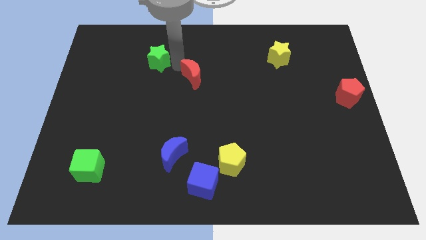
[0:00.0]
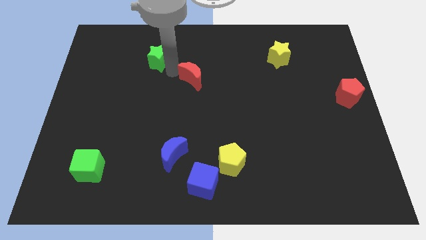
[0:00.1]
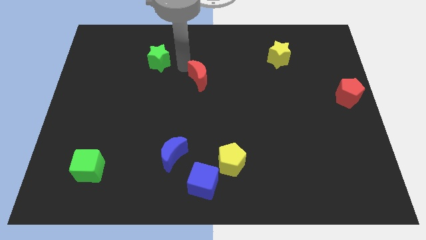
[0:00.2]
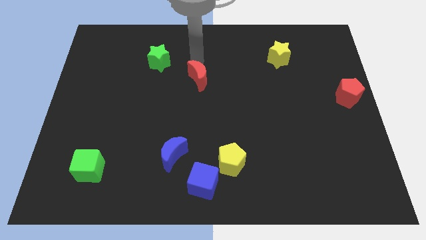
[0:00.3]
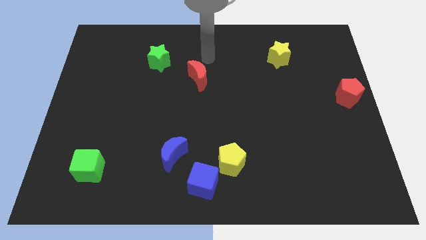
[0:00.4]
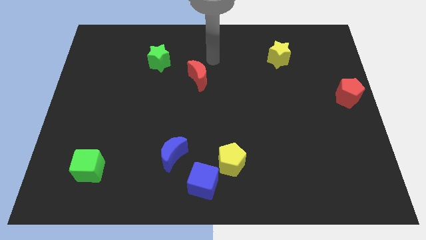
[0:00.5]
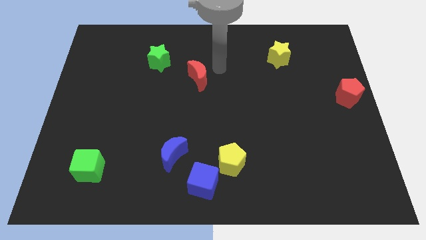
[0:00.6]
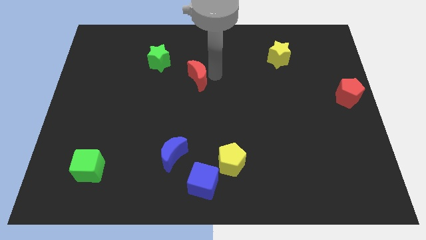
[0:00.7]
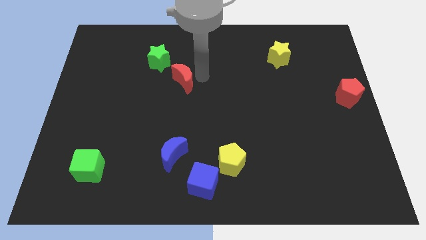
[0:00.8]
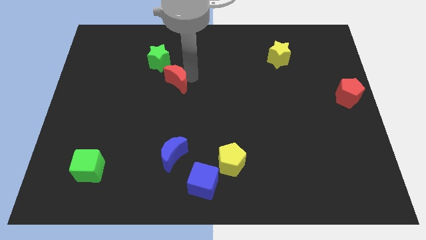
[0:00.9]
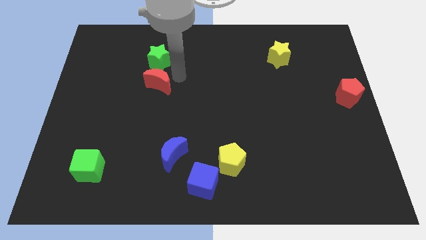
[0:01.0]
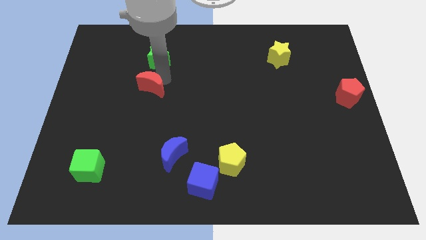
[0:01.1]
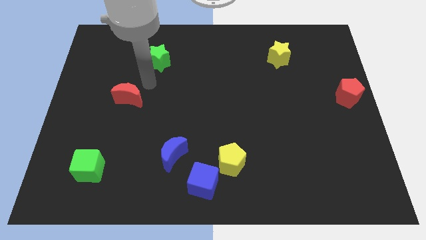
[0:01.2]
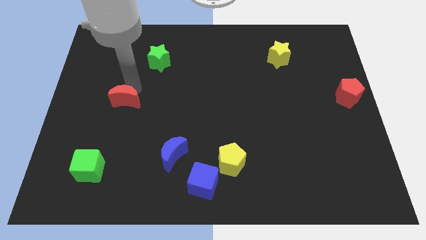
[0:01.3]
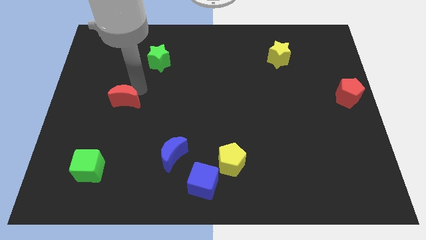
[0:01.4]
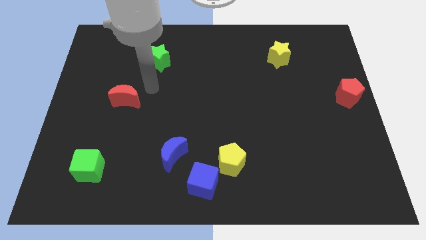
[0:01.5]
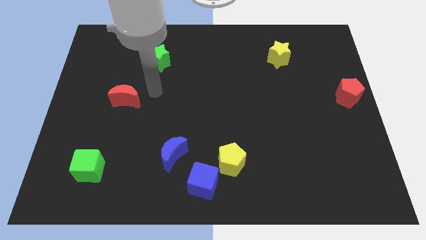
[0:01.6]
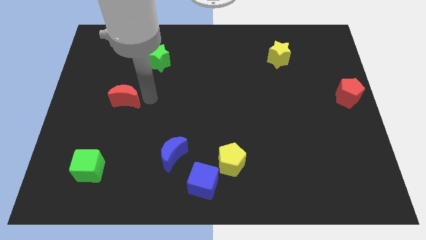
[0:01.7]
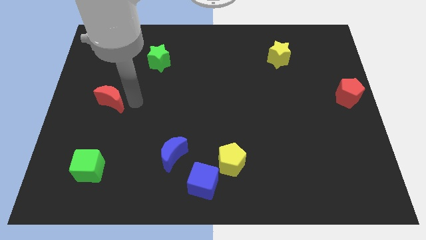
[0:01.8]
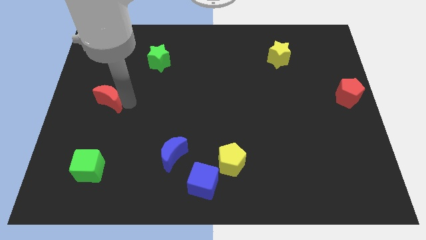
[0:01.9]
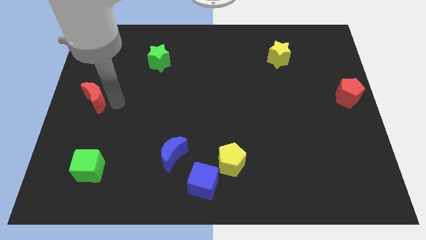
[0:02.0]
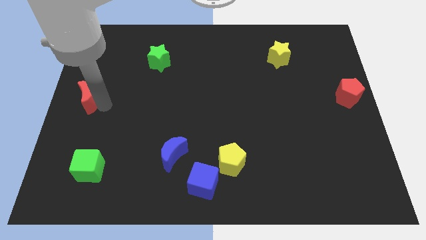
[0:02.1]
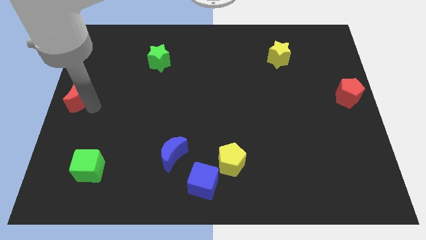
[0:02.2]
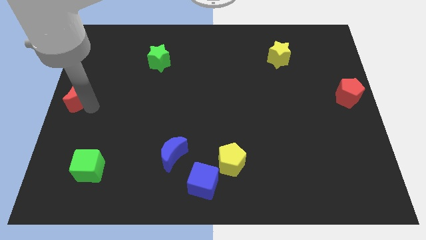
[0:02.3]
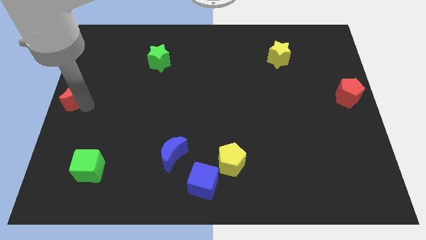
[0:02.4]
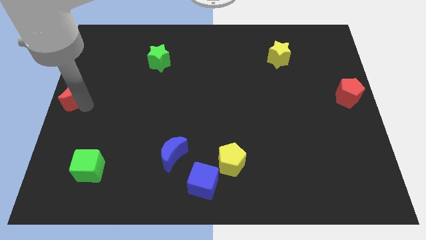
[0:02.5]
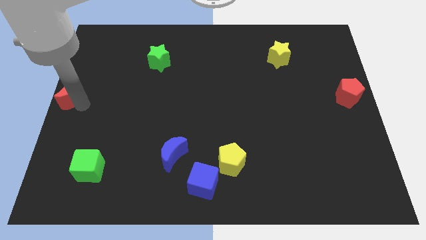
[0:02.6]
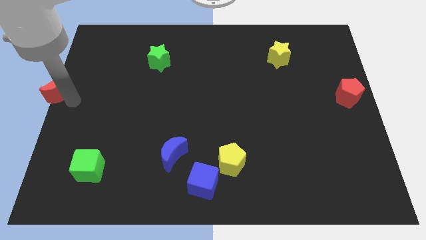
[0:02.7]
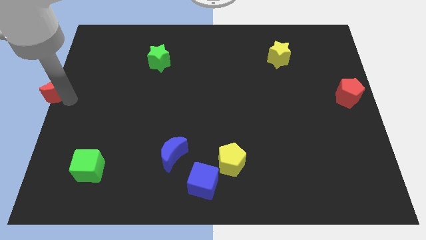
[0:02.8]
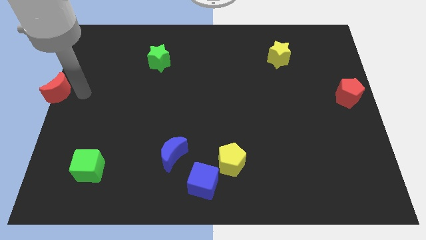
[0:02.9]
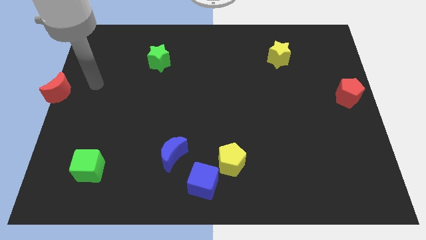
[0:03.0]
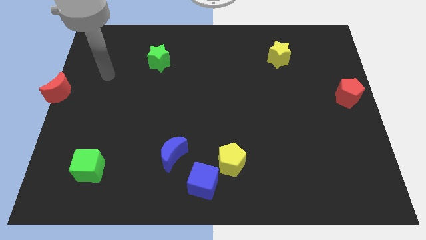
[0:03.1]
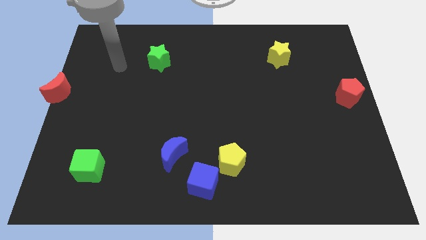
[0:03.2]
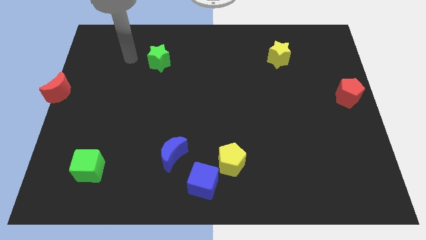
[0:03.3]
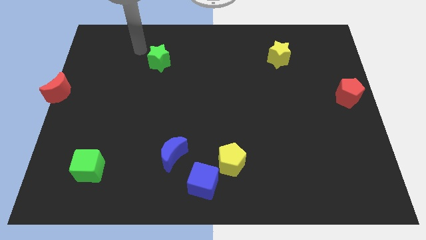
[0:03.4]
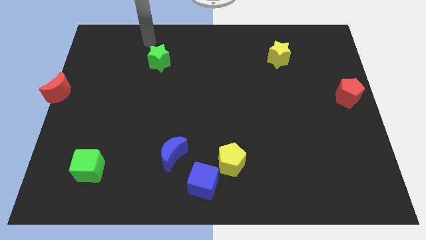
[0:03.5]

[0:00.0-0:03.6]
move the red moon to the middle left

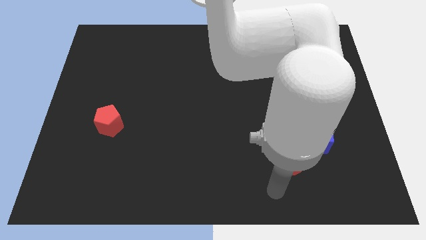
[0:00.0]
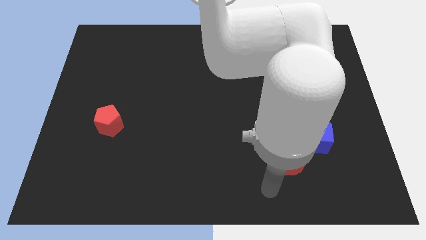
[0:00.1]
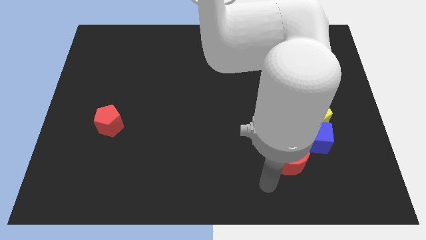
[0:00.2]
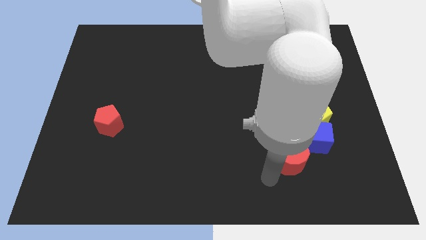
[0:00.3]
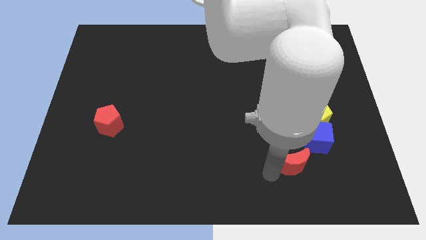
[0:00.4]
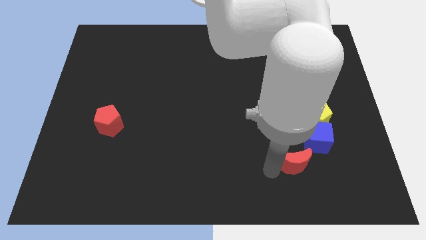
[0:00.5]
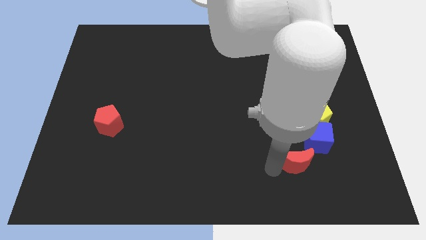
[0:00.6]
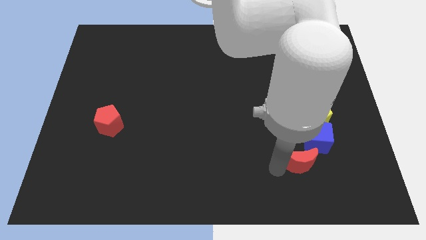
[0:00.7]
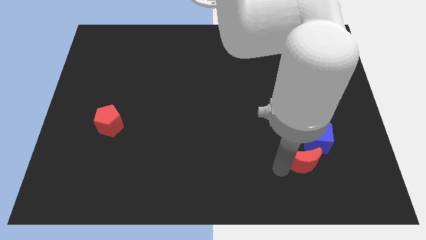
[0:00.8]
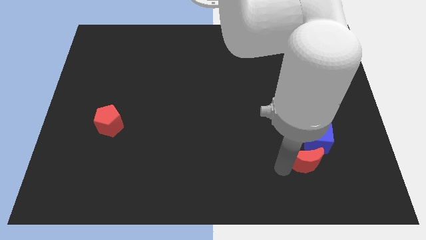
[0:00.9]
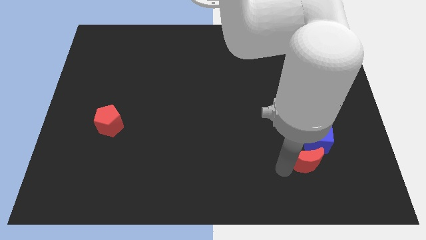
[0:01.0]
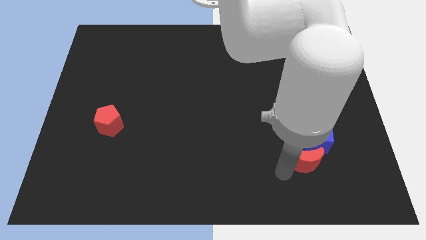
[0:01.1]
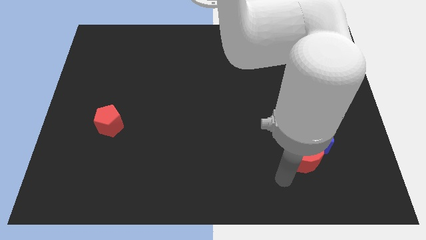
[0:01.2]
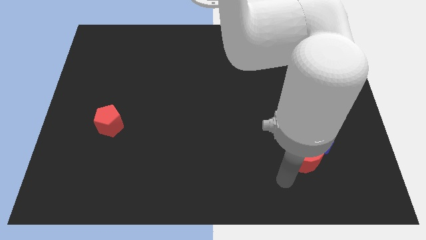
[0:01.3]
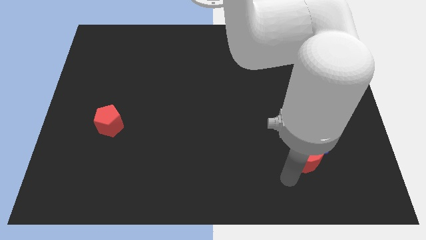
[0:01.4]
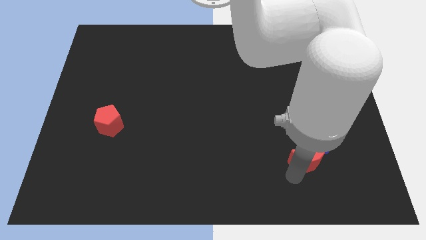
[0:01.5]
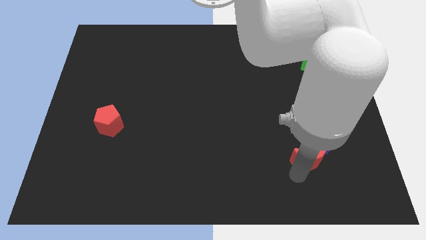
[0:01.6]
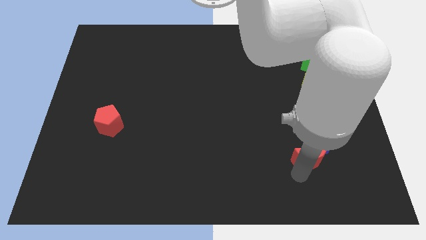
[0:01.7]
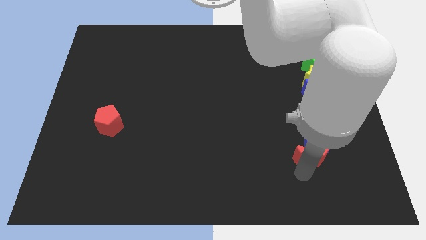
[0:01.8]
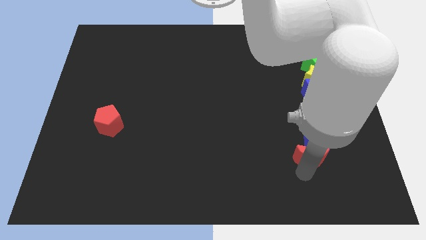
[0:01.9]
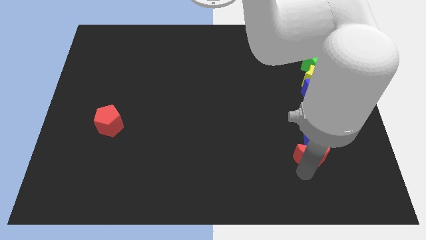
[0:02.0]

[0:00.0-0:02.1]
place the red crescent below the blue cube

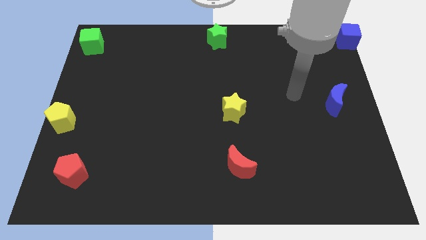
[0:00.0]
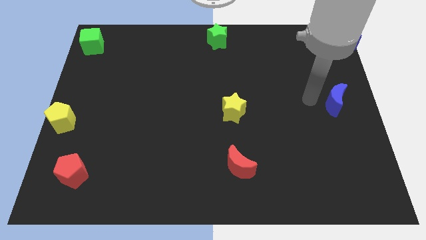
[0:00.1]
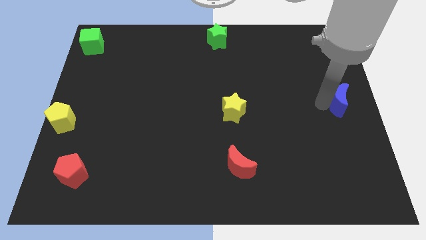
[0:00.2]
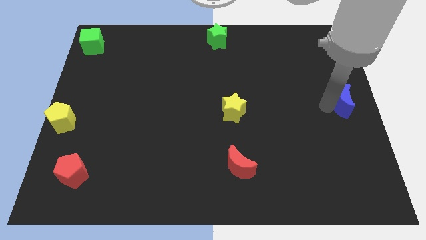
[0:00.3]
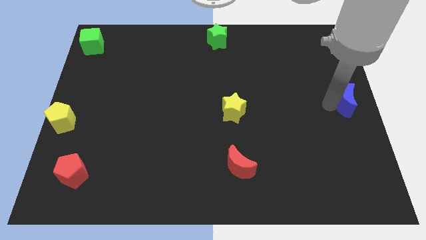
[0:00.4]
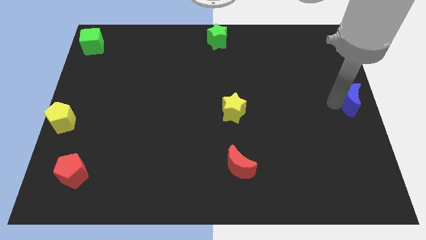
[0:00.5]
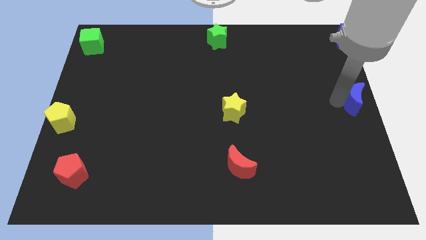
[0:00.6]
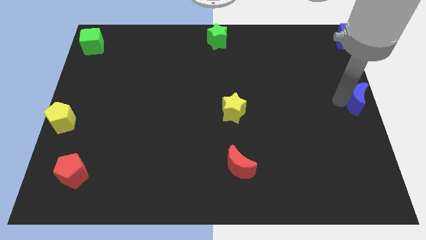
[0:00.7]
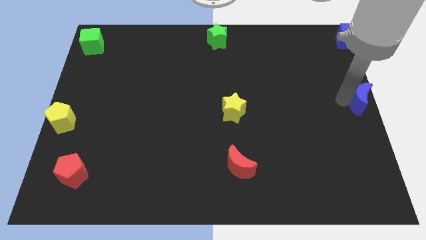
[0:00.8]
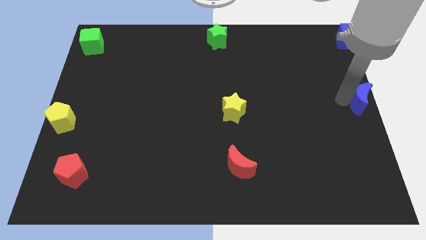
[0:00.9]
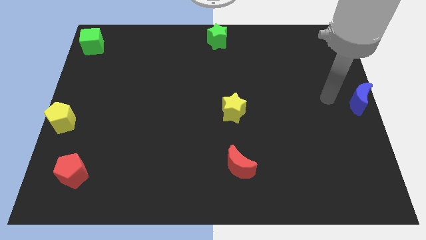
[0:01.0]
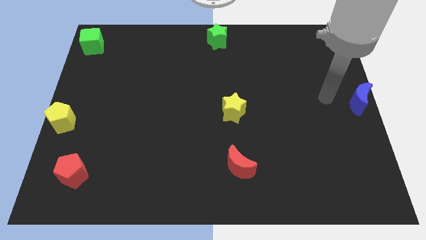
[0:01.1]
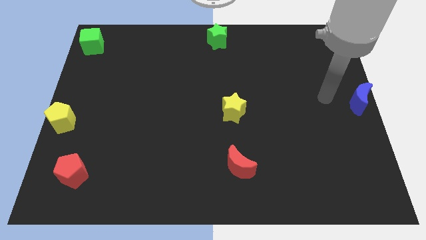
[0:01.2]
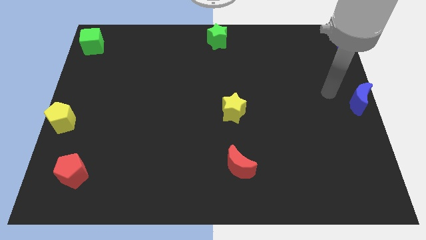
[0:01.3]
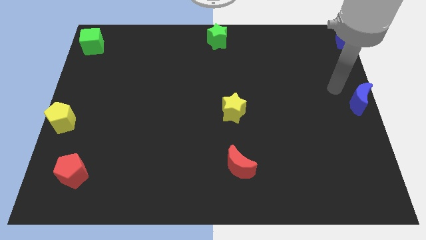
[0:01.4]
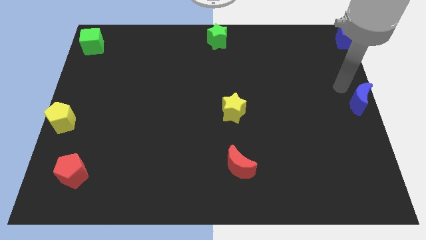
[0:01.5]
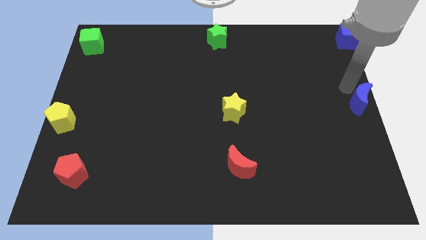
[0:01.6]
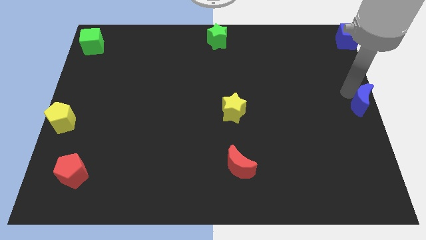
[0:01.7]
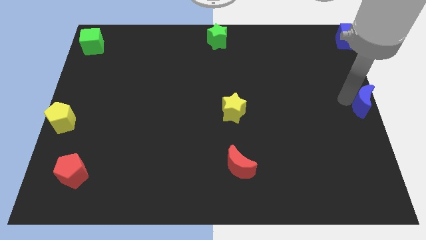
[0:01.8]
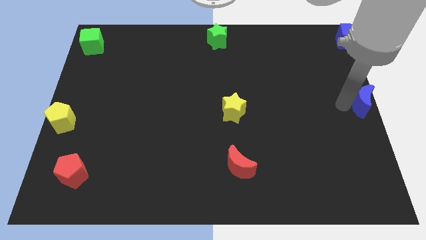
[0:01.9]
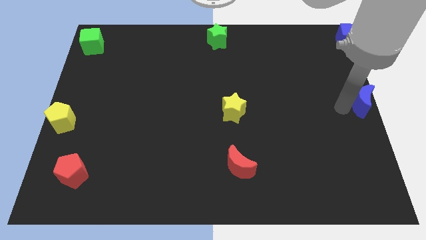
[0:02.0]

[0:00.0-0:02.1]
slide blue moon to the center right

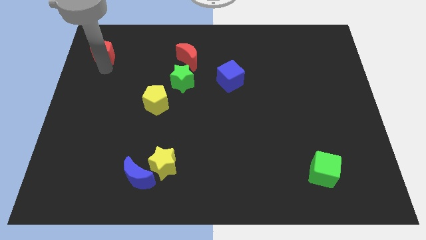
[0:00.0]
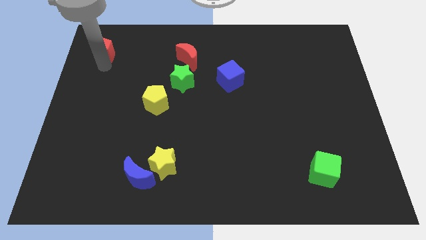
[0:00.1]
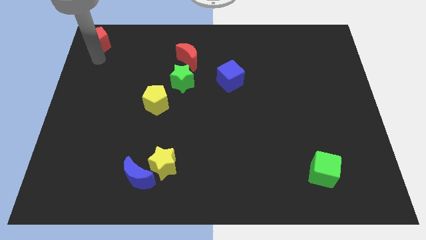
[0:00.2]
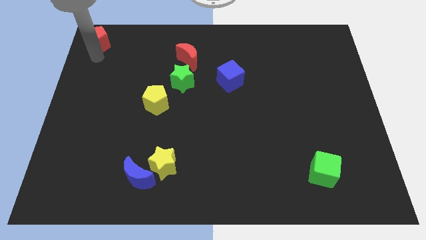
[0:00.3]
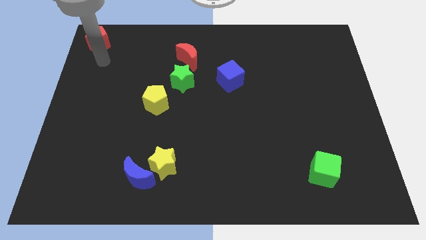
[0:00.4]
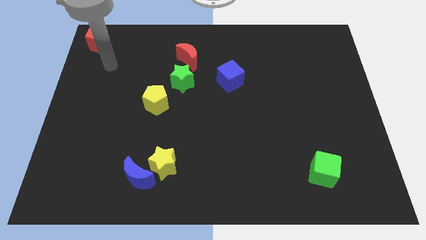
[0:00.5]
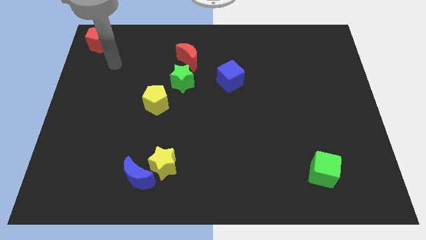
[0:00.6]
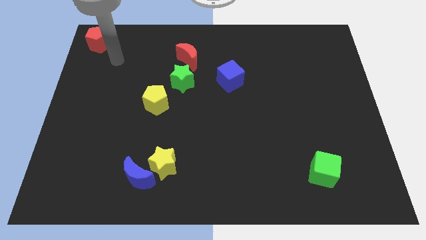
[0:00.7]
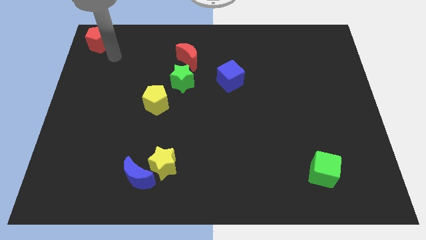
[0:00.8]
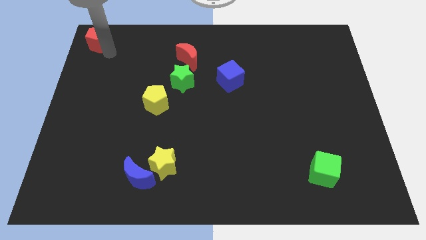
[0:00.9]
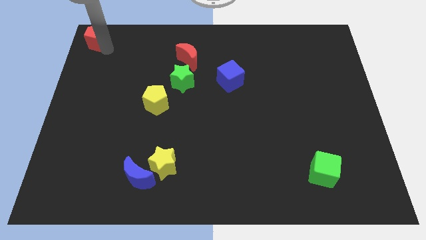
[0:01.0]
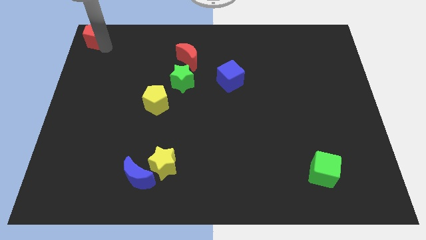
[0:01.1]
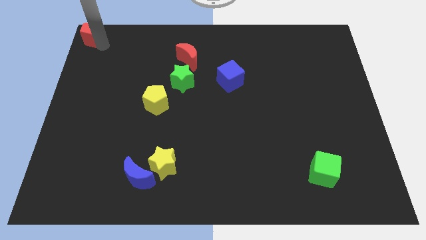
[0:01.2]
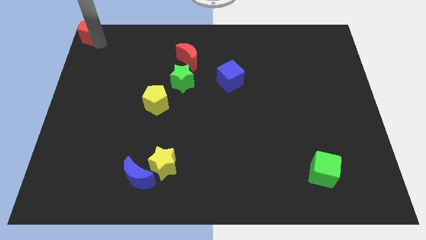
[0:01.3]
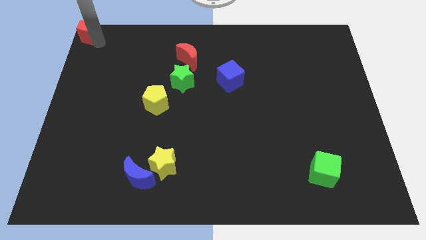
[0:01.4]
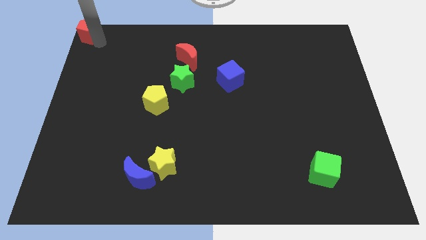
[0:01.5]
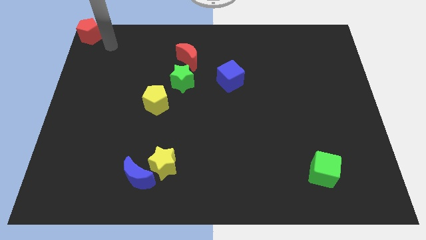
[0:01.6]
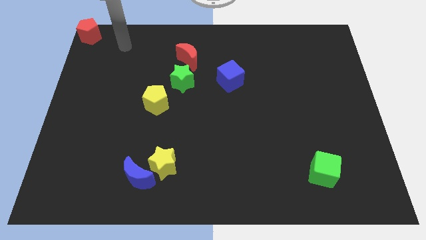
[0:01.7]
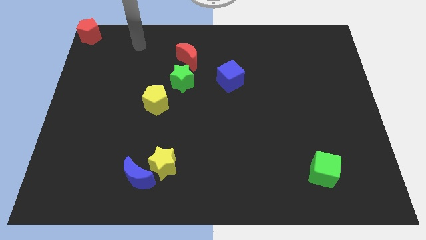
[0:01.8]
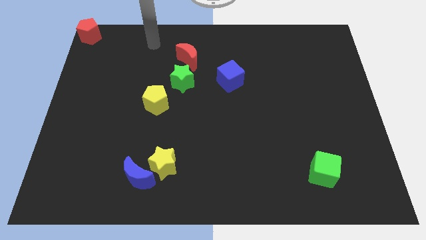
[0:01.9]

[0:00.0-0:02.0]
put the red pentagon at the top left corner of the board
